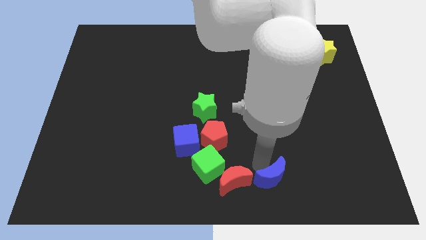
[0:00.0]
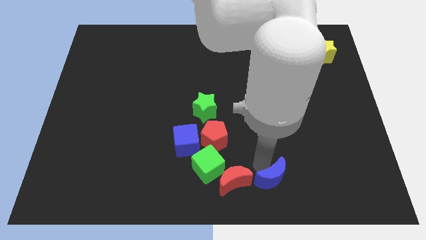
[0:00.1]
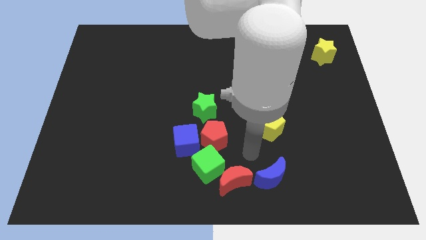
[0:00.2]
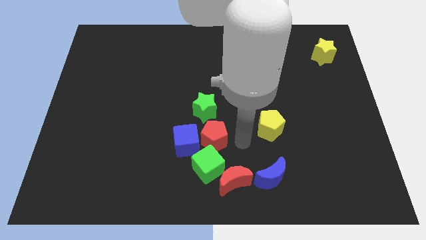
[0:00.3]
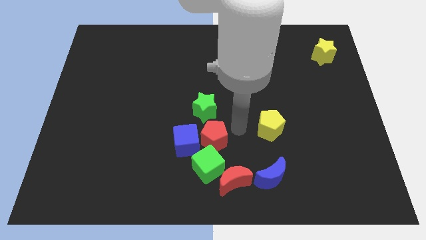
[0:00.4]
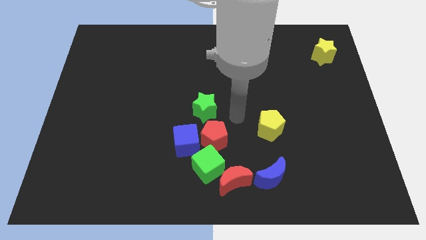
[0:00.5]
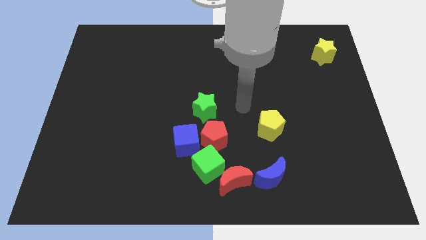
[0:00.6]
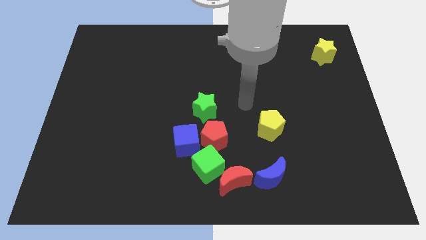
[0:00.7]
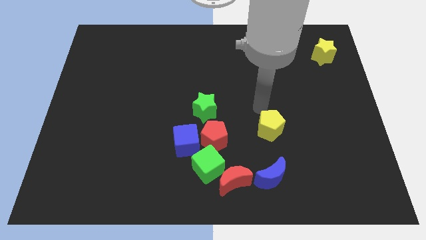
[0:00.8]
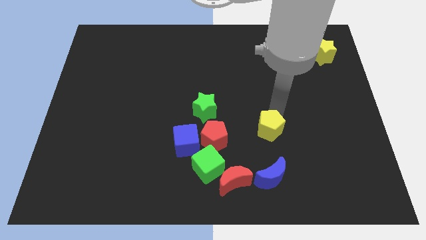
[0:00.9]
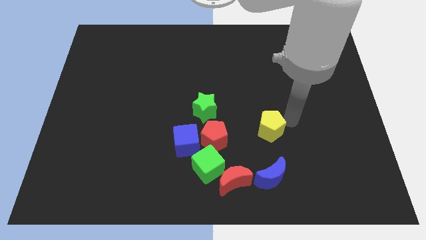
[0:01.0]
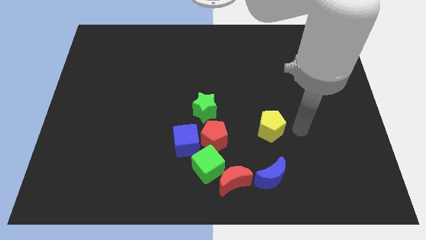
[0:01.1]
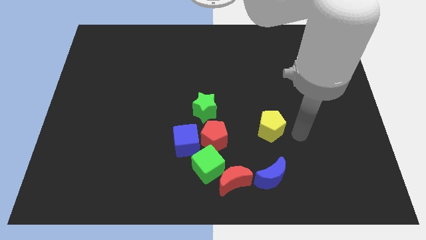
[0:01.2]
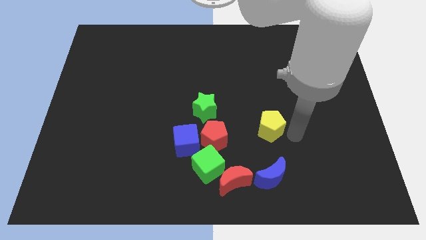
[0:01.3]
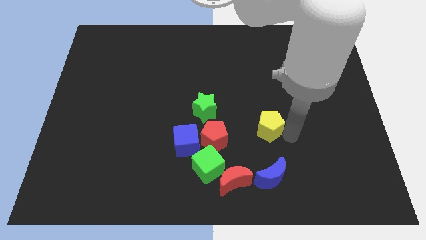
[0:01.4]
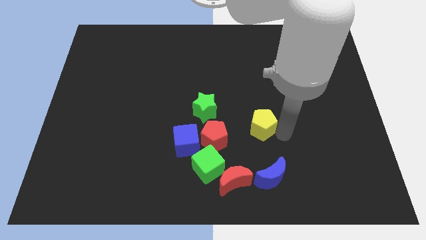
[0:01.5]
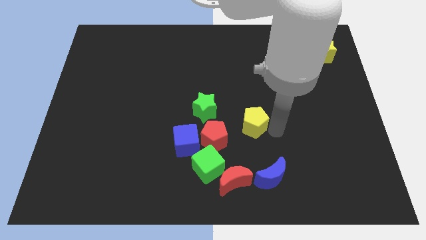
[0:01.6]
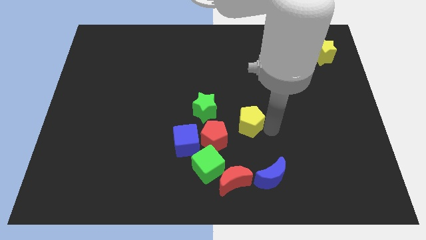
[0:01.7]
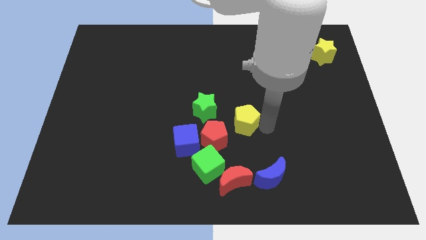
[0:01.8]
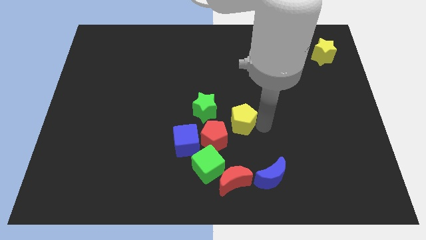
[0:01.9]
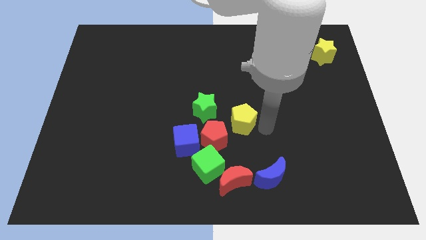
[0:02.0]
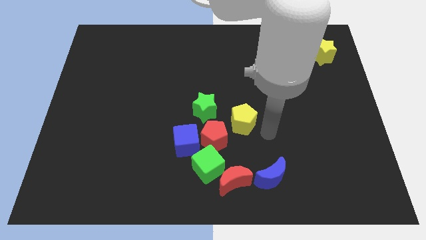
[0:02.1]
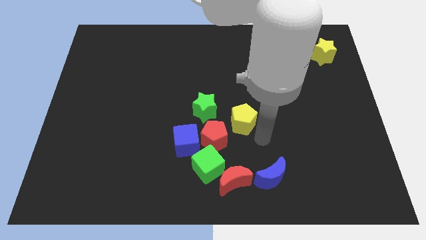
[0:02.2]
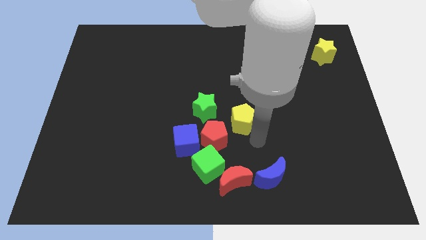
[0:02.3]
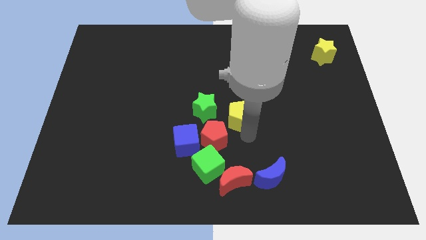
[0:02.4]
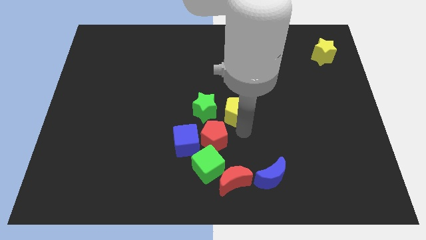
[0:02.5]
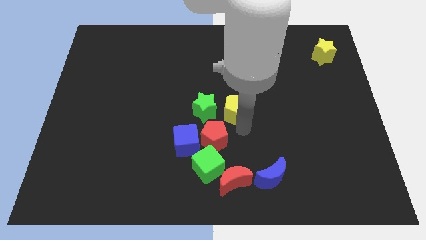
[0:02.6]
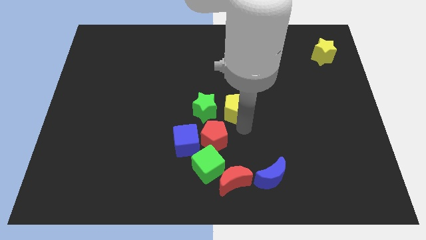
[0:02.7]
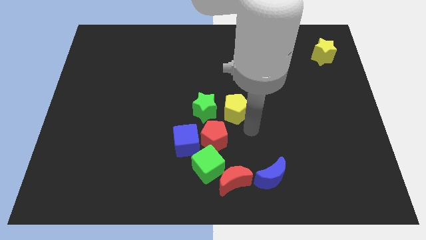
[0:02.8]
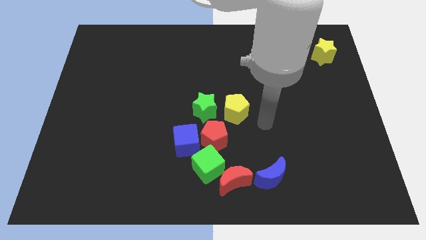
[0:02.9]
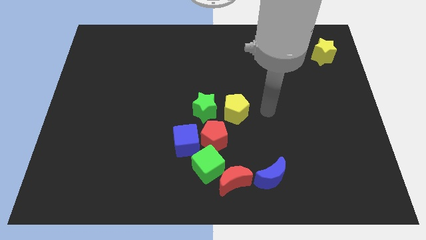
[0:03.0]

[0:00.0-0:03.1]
place the yellow pentagon to the right side of the green star

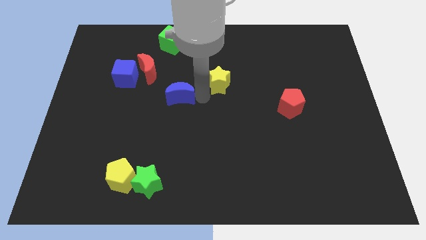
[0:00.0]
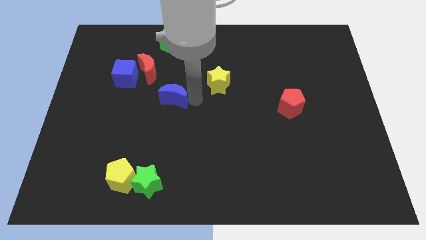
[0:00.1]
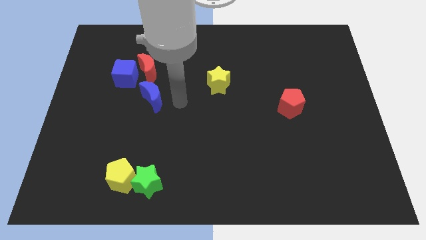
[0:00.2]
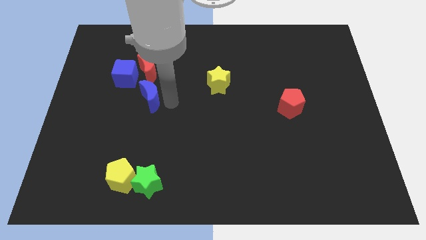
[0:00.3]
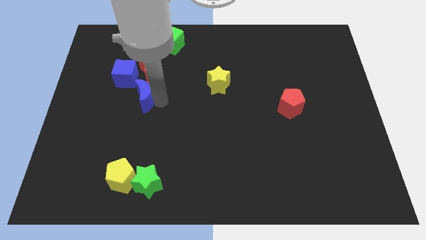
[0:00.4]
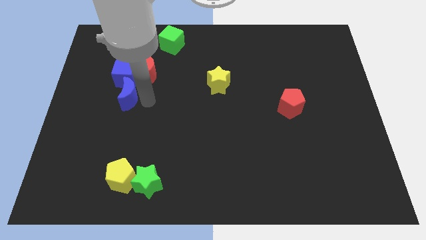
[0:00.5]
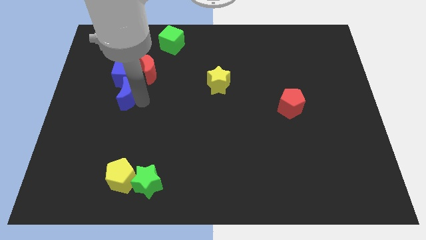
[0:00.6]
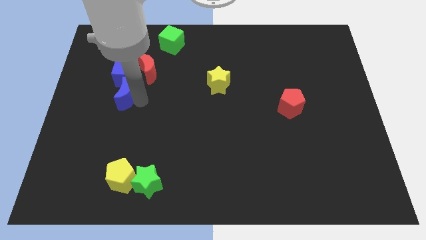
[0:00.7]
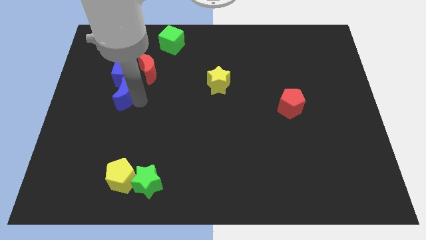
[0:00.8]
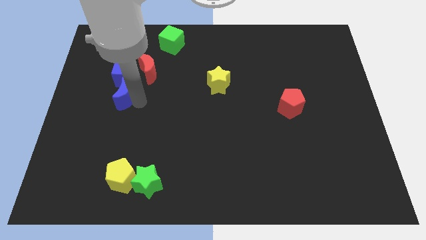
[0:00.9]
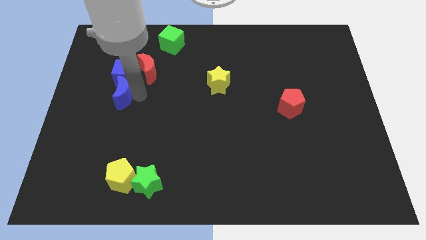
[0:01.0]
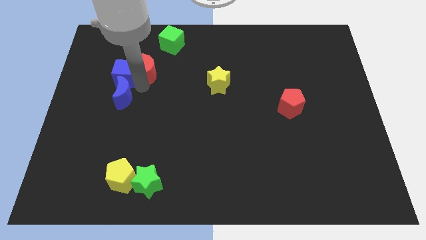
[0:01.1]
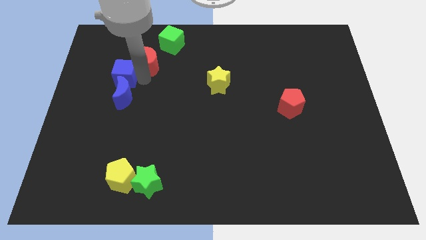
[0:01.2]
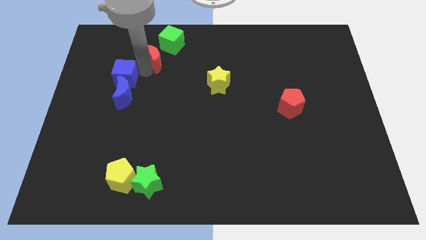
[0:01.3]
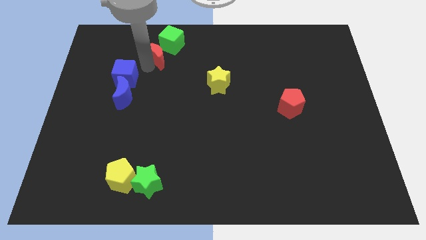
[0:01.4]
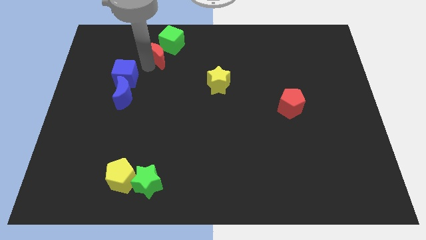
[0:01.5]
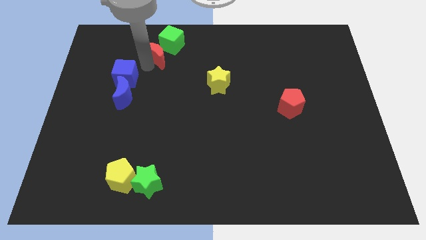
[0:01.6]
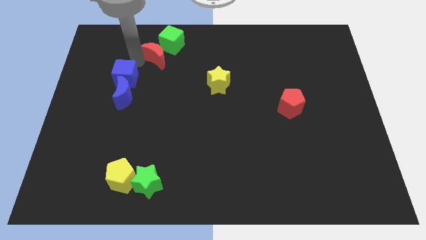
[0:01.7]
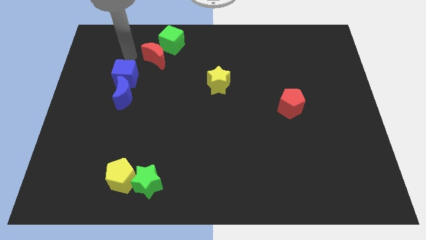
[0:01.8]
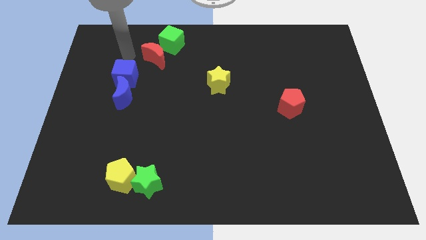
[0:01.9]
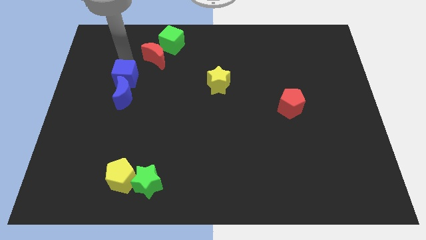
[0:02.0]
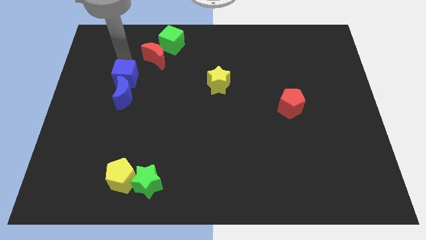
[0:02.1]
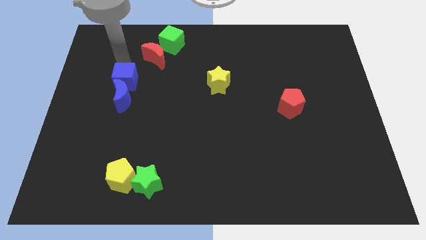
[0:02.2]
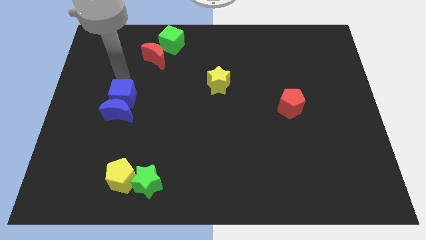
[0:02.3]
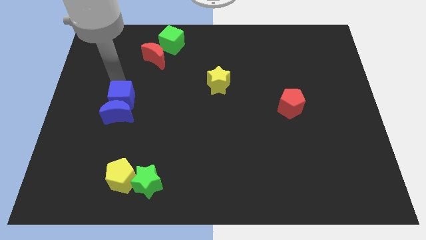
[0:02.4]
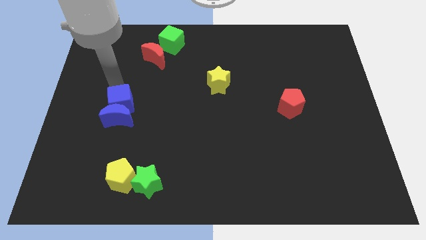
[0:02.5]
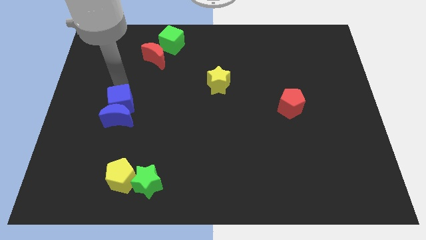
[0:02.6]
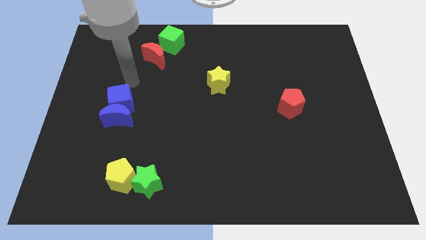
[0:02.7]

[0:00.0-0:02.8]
push blue cube slightly towards down

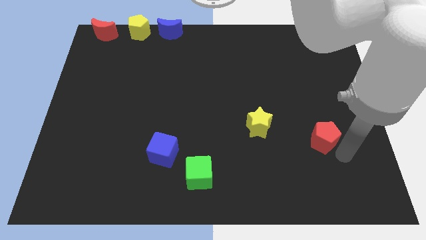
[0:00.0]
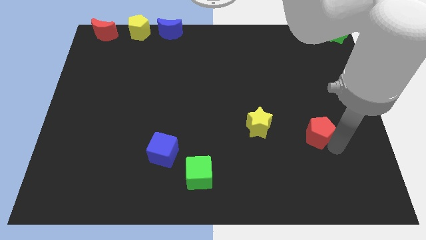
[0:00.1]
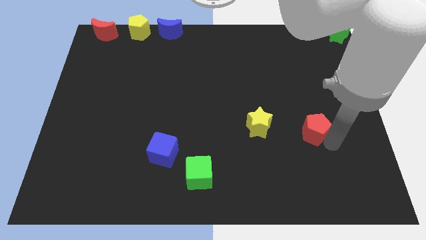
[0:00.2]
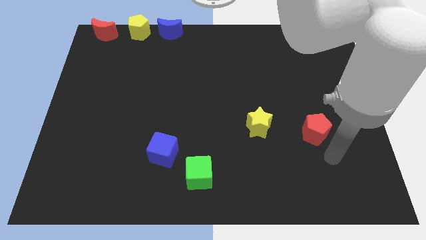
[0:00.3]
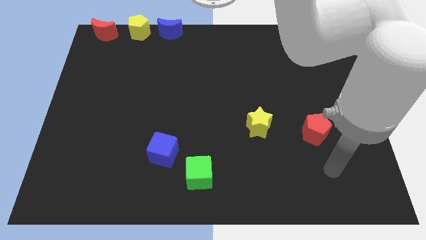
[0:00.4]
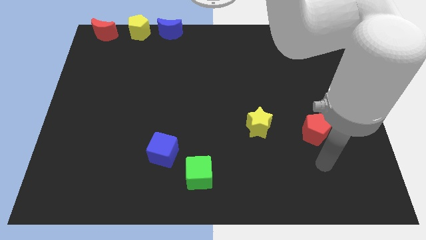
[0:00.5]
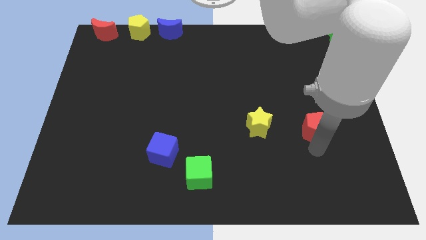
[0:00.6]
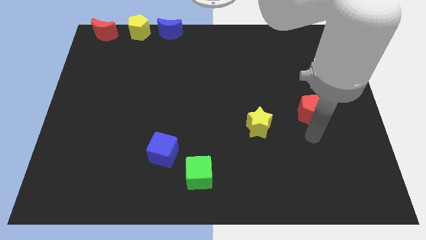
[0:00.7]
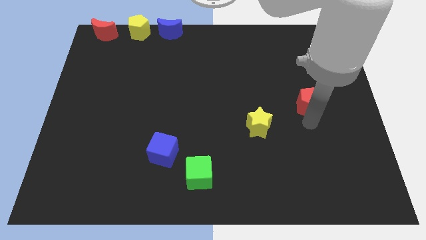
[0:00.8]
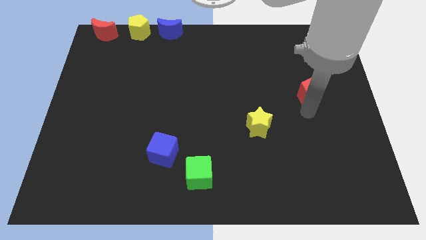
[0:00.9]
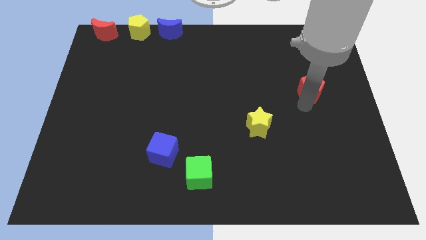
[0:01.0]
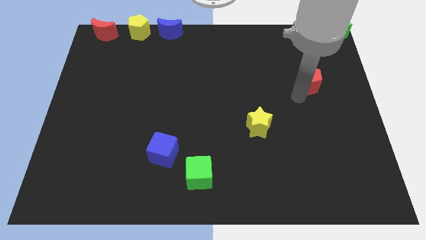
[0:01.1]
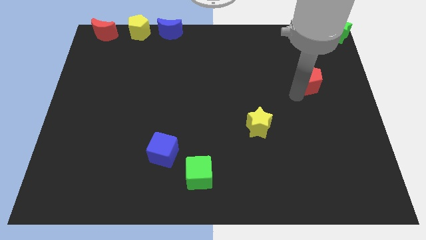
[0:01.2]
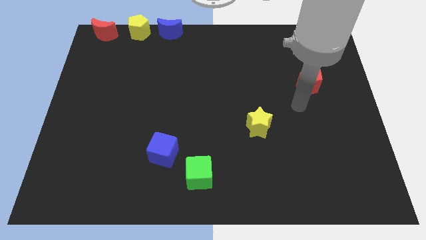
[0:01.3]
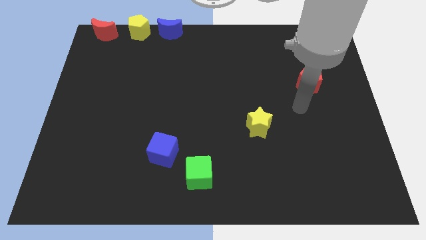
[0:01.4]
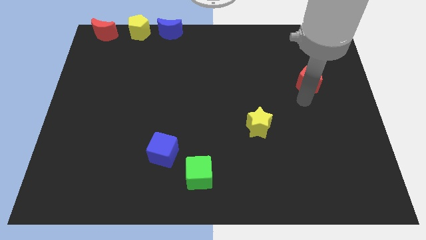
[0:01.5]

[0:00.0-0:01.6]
place the red pentagon right diagonally towards yellow star

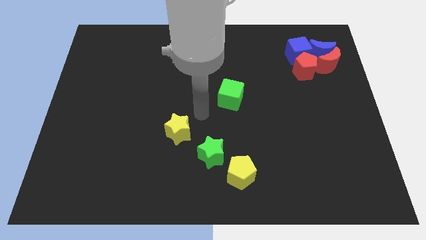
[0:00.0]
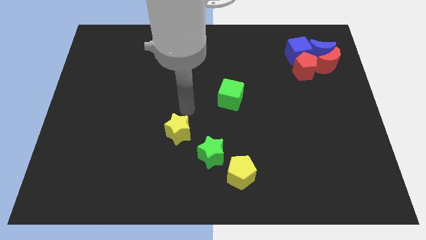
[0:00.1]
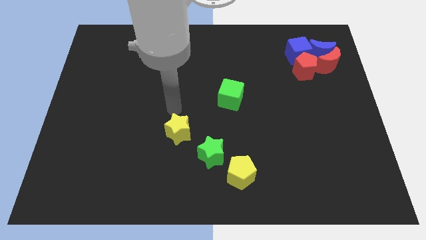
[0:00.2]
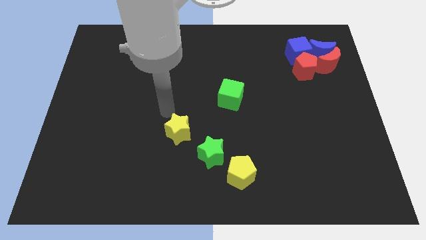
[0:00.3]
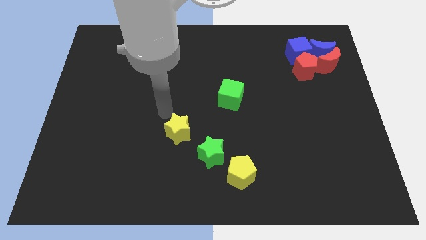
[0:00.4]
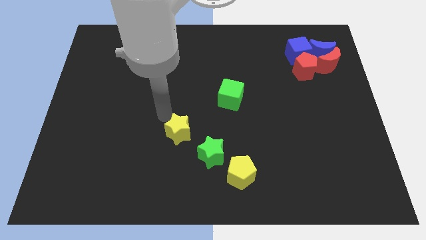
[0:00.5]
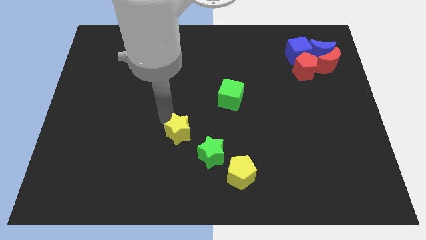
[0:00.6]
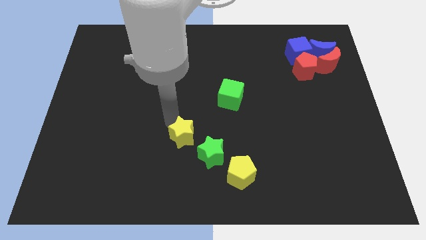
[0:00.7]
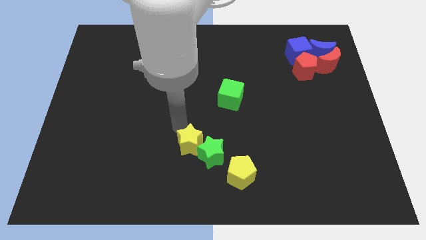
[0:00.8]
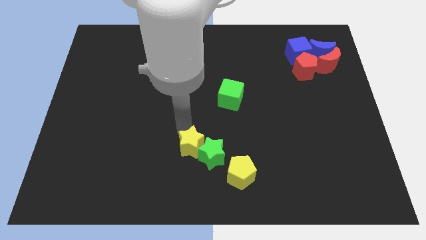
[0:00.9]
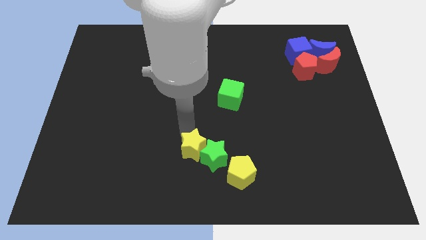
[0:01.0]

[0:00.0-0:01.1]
push yellow star towards green star

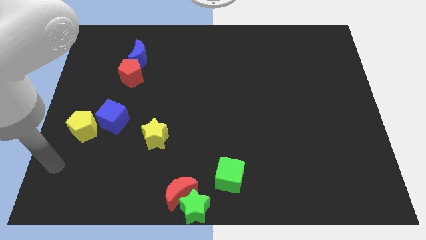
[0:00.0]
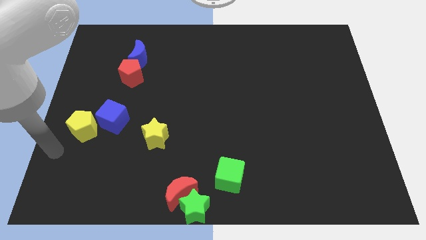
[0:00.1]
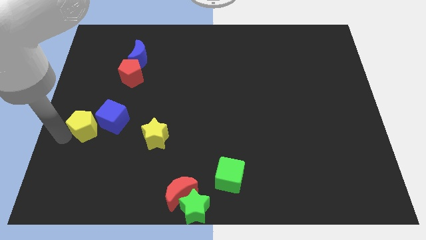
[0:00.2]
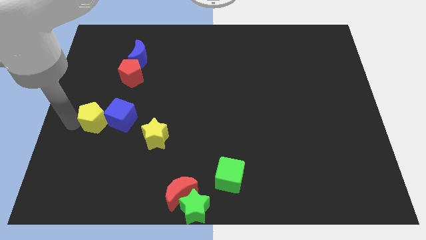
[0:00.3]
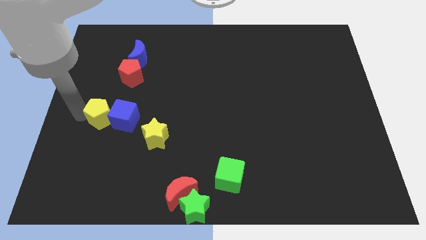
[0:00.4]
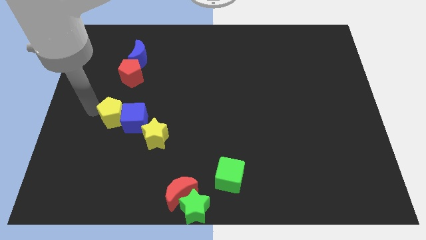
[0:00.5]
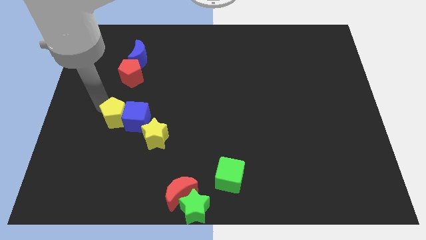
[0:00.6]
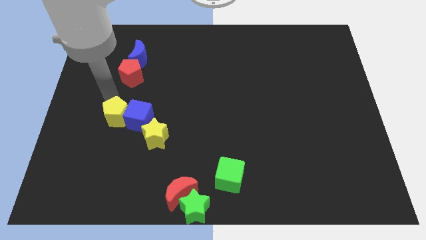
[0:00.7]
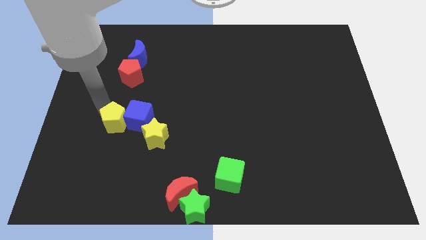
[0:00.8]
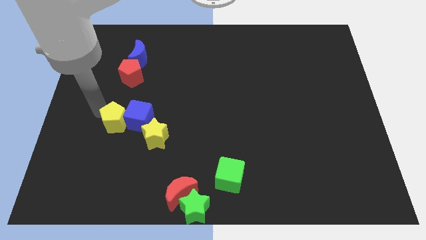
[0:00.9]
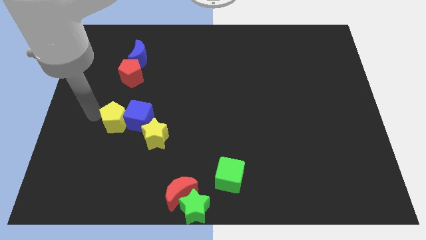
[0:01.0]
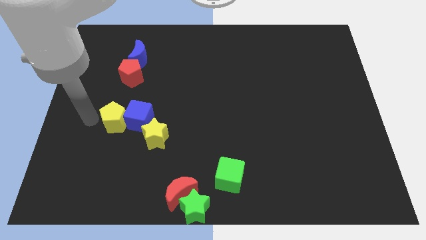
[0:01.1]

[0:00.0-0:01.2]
push the blue cube and the yellow pentagon above the yellow star
